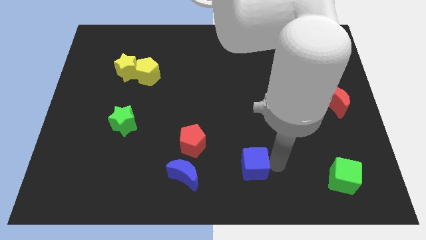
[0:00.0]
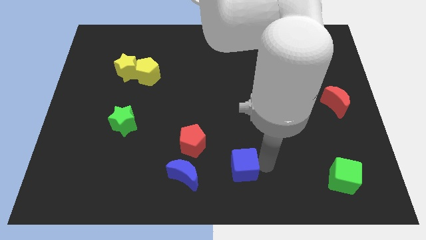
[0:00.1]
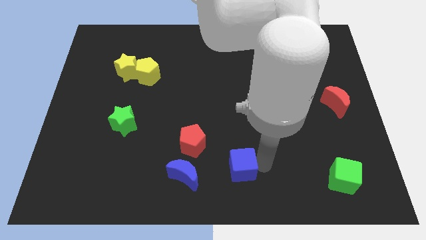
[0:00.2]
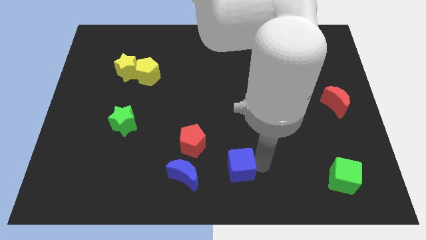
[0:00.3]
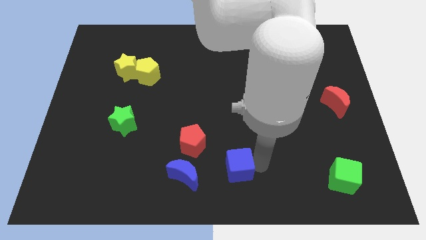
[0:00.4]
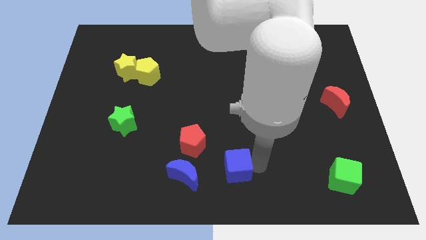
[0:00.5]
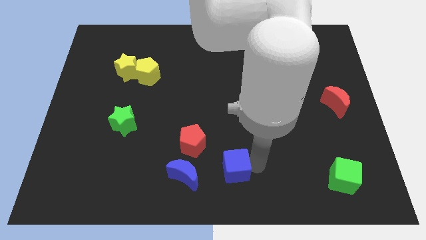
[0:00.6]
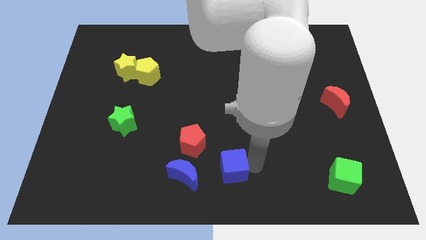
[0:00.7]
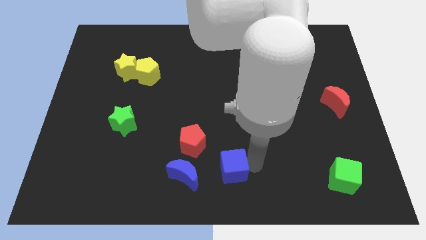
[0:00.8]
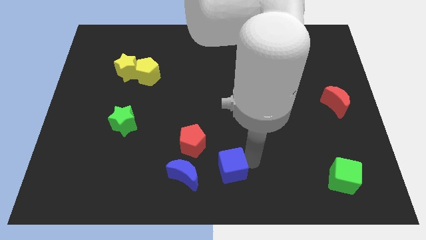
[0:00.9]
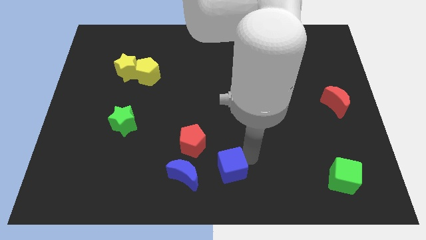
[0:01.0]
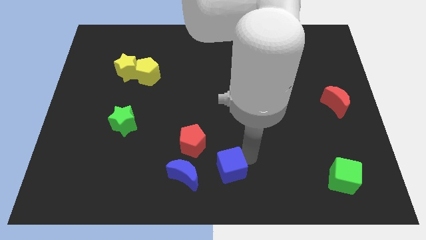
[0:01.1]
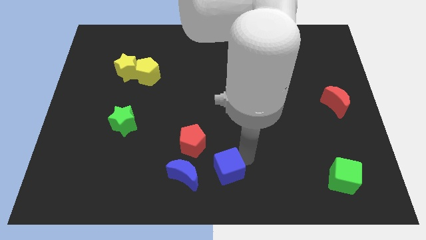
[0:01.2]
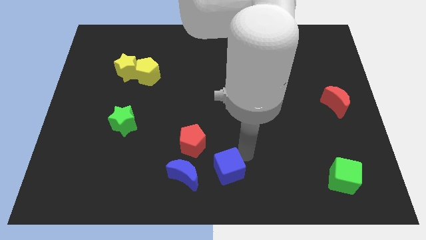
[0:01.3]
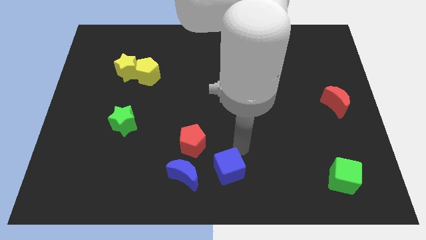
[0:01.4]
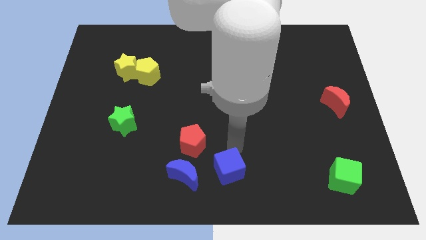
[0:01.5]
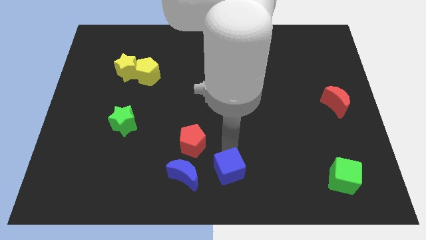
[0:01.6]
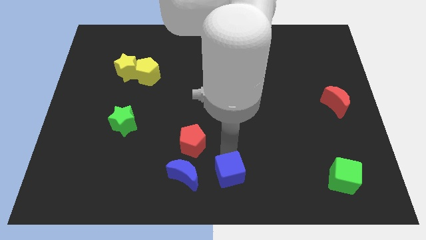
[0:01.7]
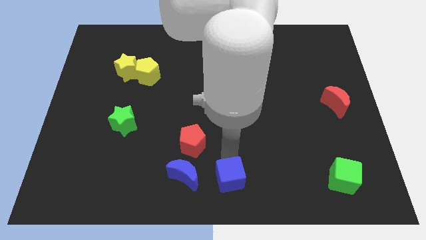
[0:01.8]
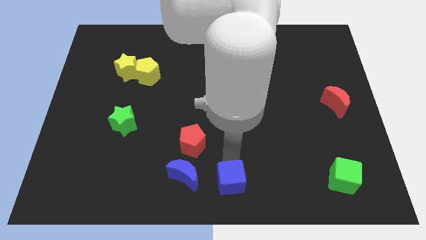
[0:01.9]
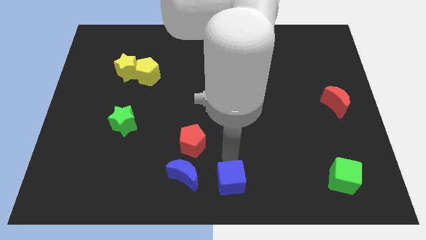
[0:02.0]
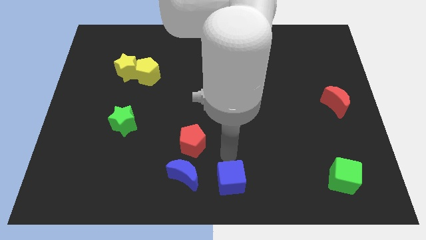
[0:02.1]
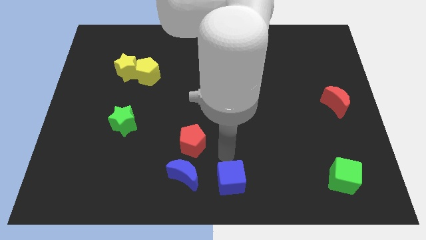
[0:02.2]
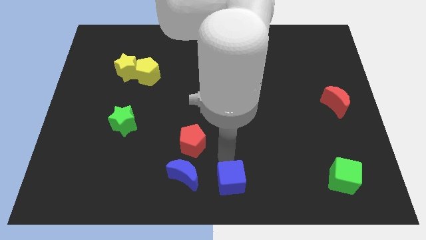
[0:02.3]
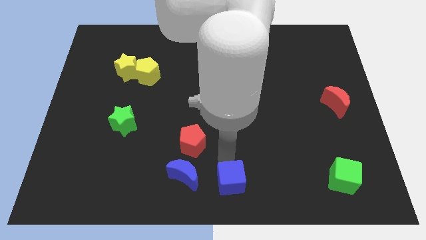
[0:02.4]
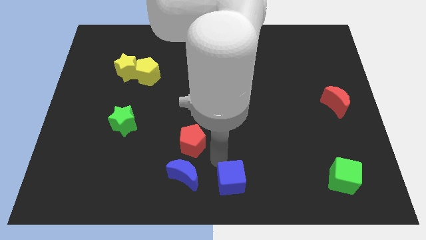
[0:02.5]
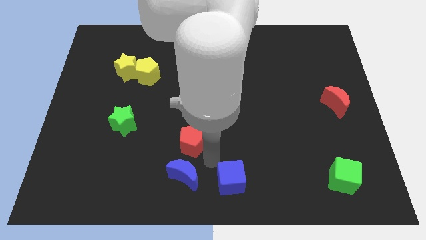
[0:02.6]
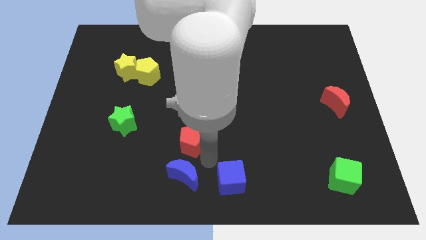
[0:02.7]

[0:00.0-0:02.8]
move the blue cube parallel to the right of the blue moon

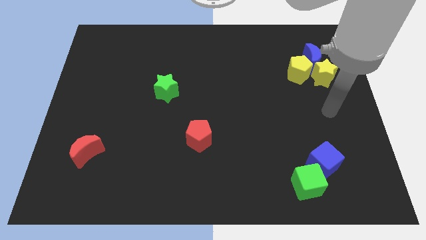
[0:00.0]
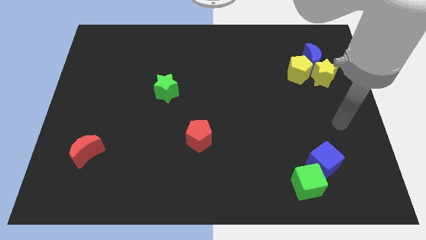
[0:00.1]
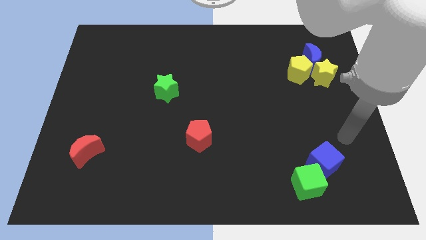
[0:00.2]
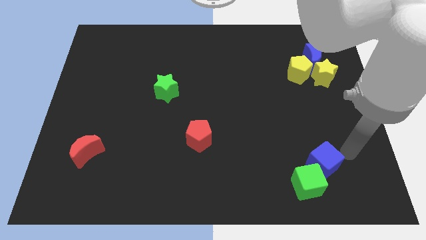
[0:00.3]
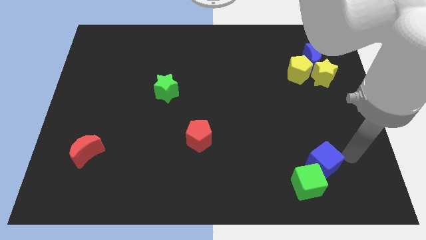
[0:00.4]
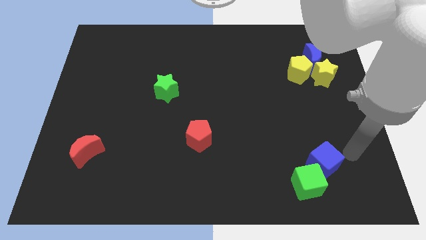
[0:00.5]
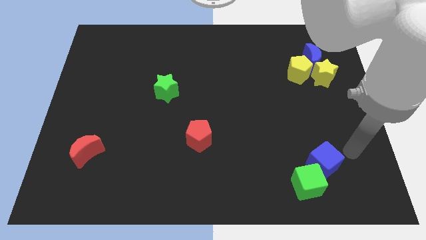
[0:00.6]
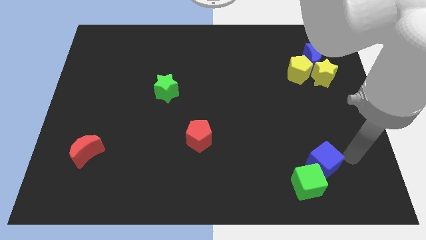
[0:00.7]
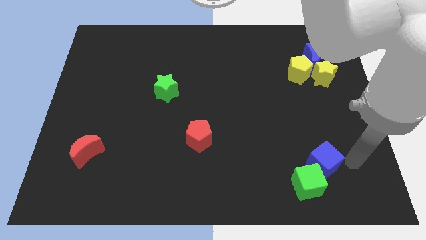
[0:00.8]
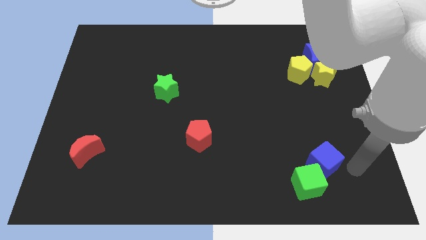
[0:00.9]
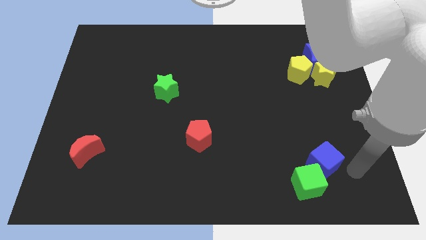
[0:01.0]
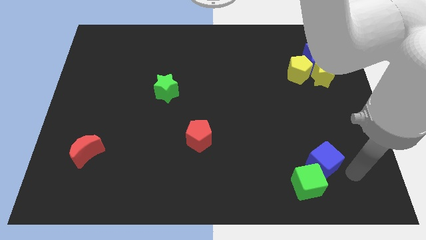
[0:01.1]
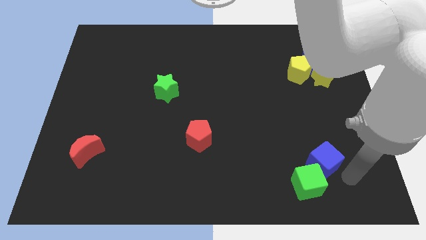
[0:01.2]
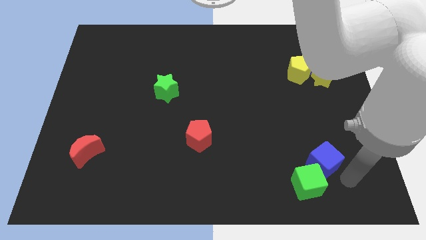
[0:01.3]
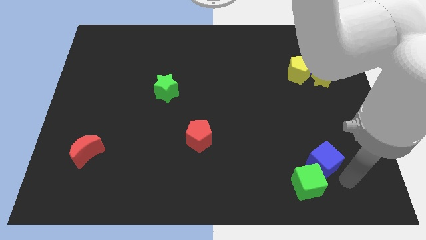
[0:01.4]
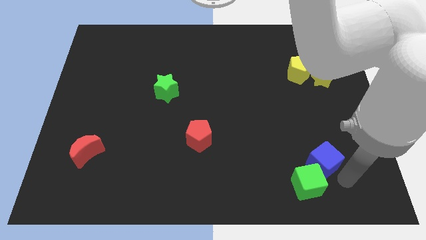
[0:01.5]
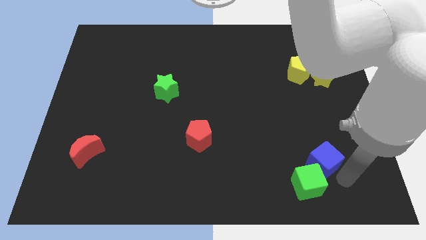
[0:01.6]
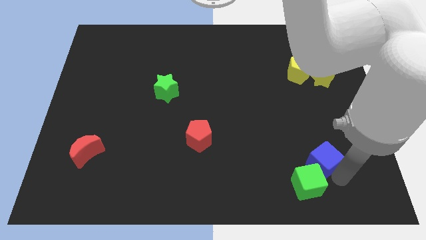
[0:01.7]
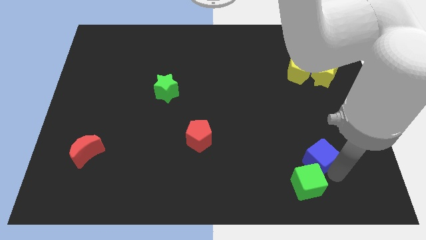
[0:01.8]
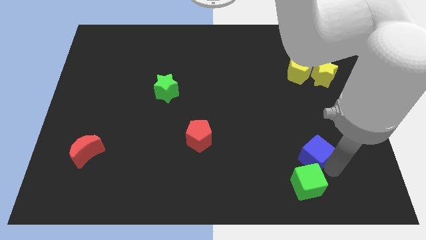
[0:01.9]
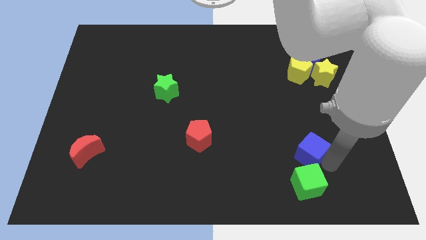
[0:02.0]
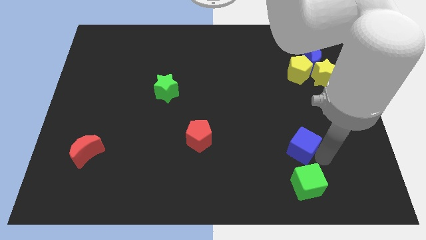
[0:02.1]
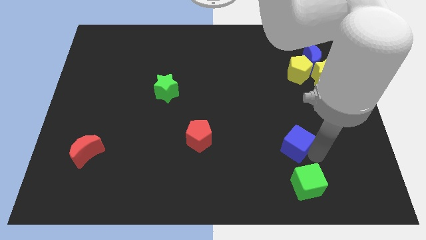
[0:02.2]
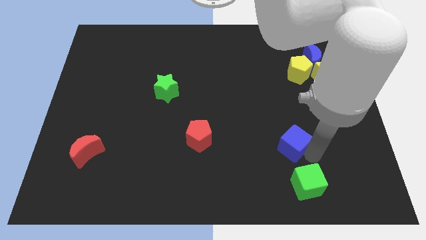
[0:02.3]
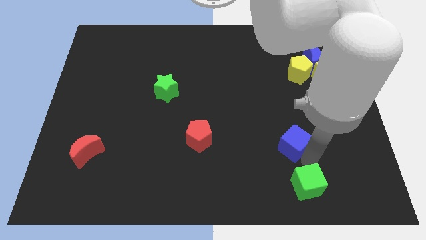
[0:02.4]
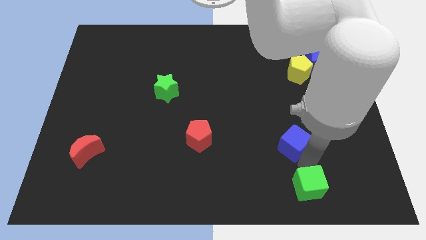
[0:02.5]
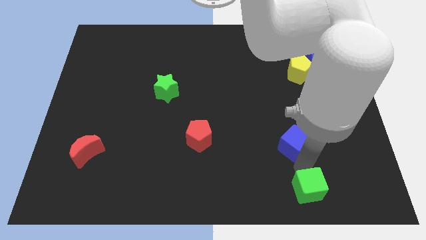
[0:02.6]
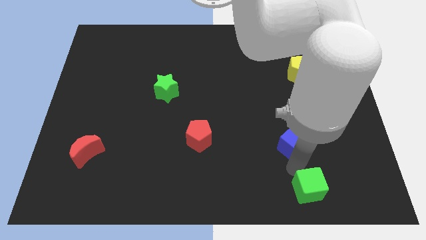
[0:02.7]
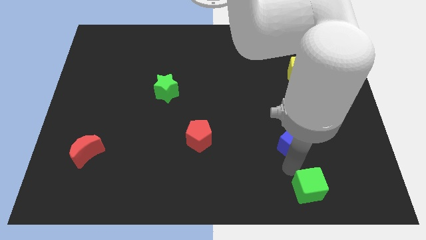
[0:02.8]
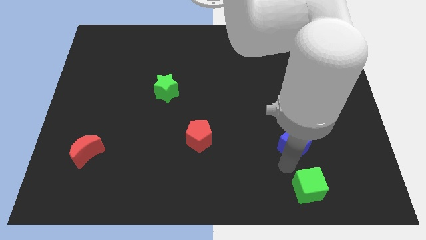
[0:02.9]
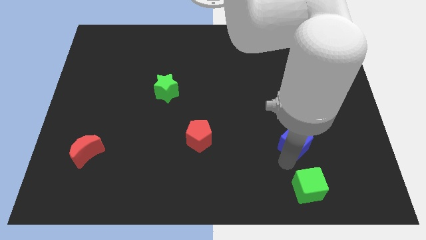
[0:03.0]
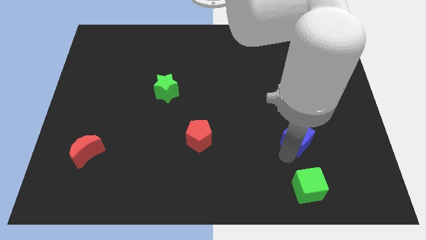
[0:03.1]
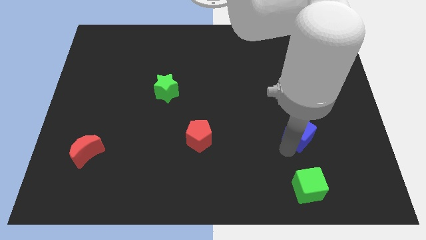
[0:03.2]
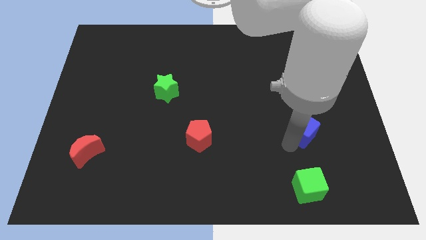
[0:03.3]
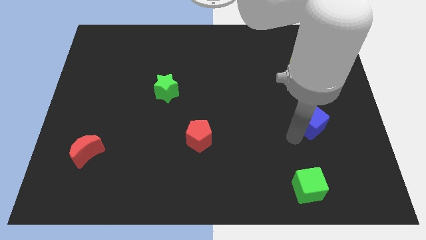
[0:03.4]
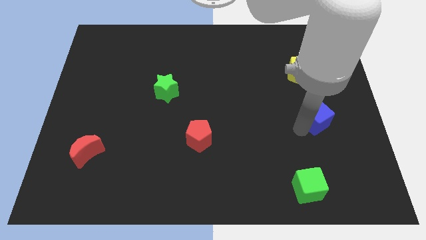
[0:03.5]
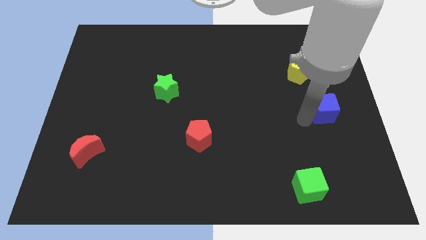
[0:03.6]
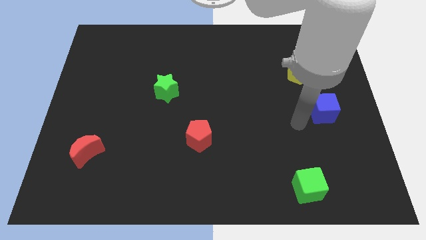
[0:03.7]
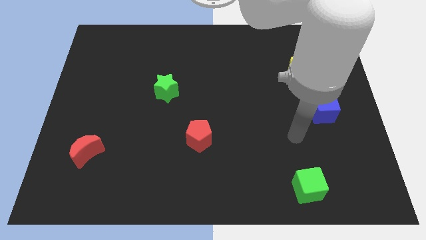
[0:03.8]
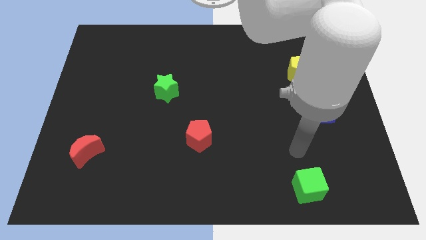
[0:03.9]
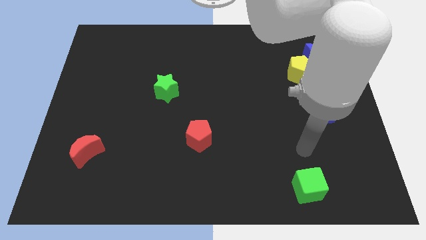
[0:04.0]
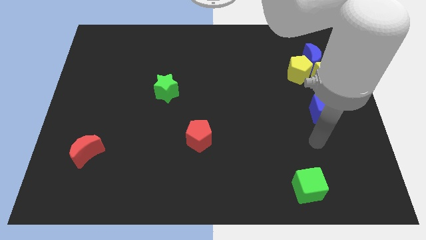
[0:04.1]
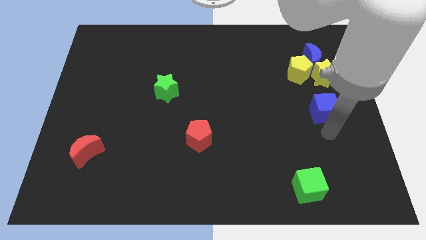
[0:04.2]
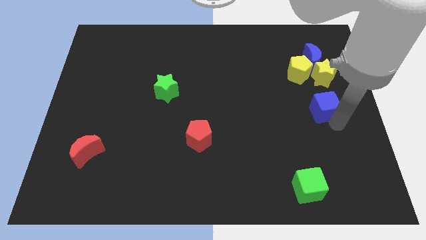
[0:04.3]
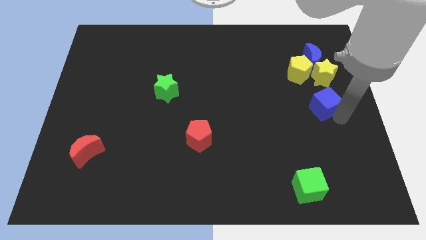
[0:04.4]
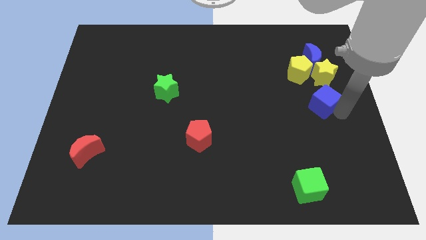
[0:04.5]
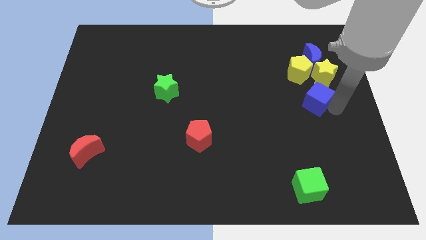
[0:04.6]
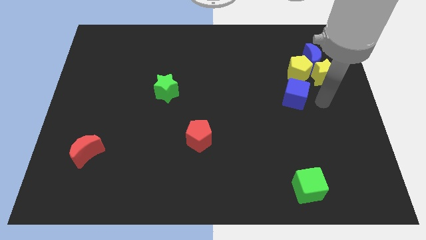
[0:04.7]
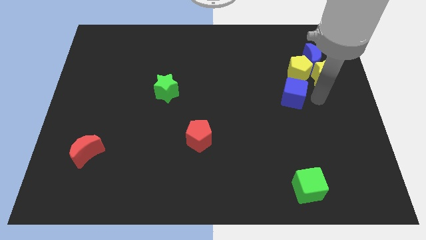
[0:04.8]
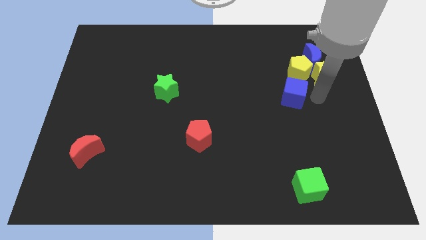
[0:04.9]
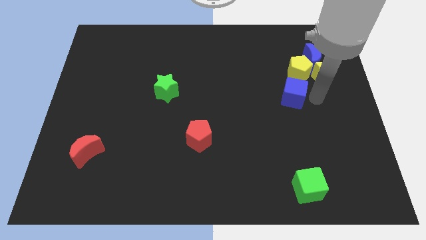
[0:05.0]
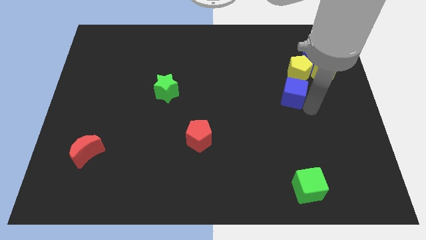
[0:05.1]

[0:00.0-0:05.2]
place the blue cube below the yellow pentagon

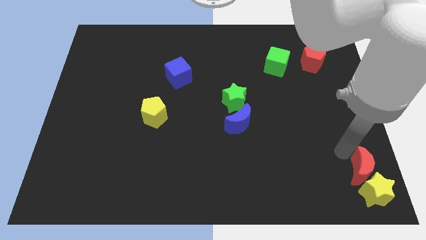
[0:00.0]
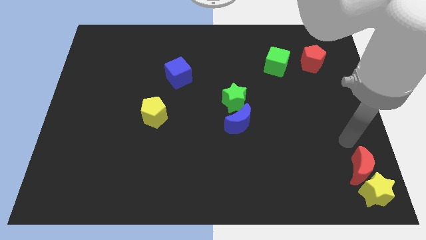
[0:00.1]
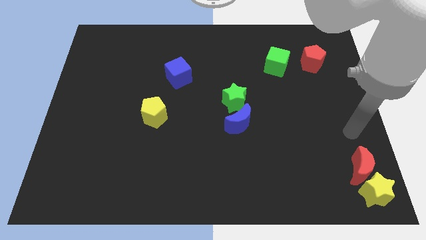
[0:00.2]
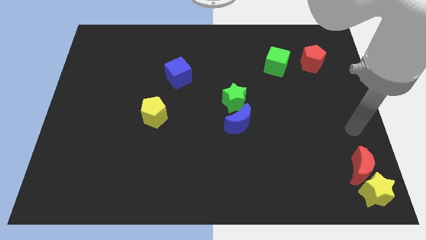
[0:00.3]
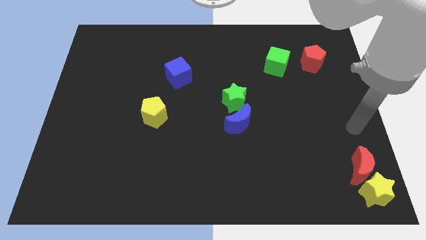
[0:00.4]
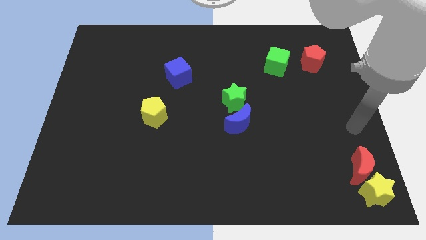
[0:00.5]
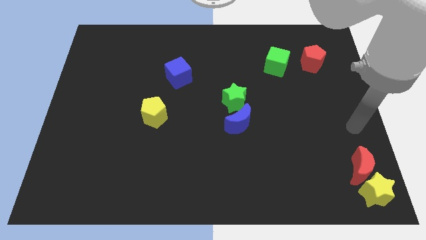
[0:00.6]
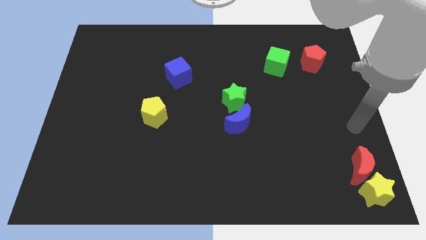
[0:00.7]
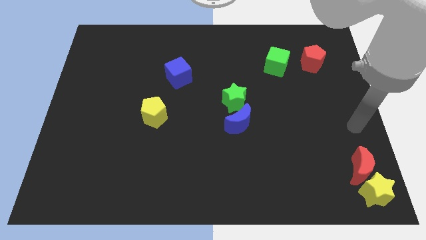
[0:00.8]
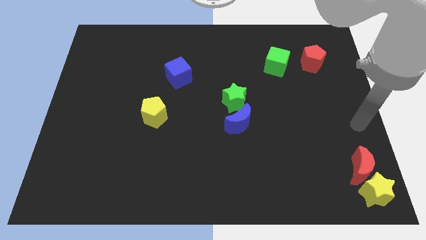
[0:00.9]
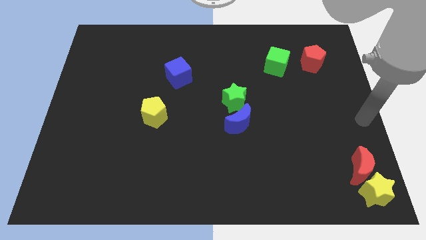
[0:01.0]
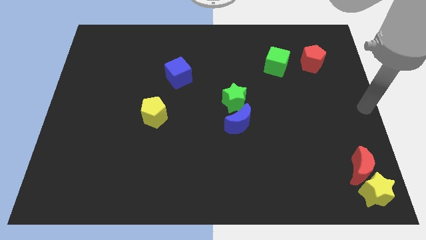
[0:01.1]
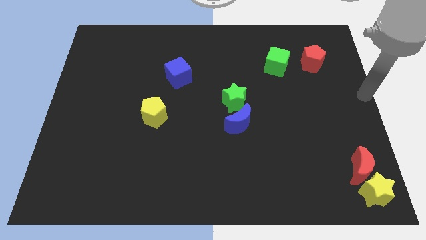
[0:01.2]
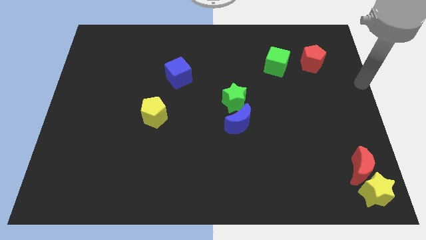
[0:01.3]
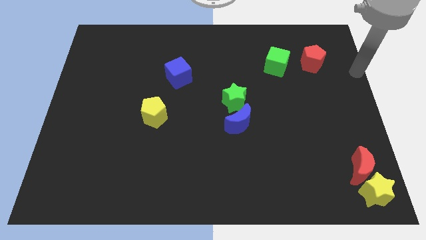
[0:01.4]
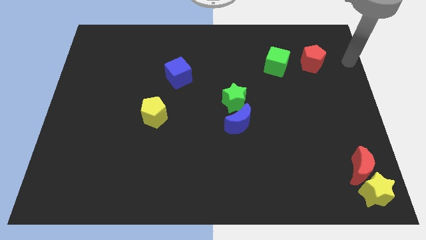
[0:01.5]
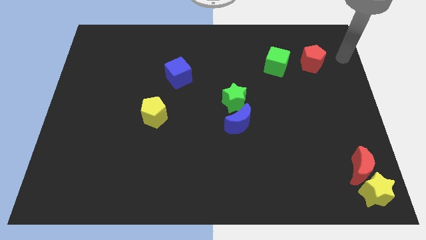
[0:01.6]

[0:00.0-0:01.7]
move red moon and yellow star to the bottom right corner
